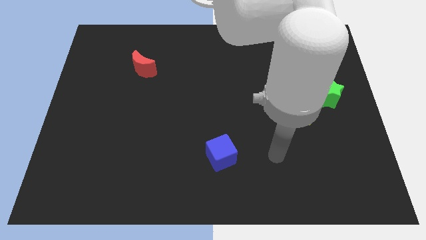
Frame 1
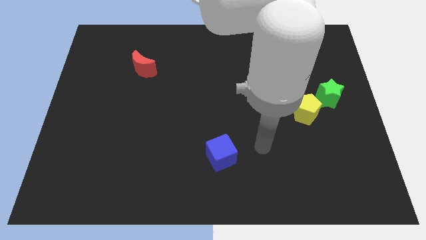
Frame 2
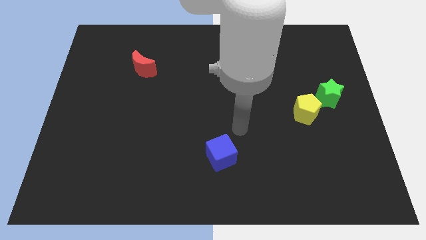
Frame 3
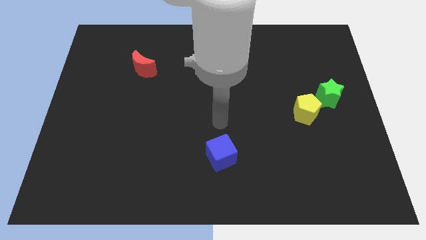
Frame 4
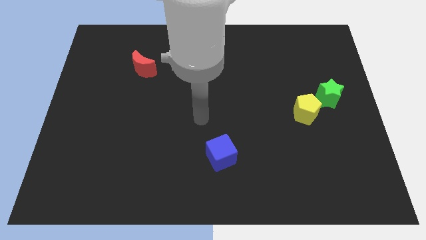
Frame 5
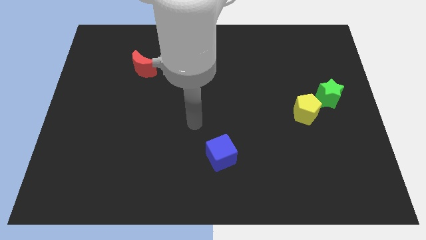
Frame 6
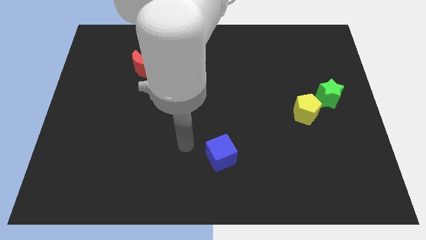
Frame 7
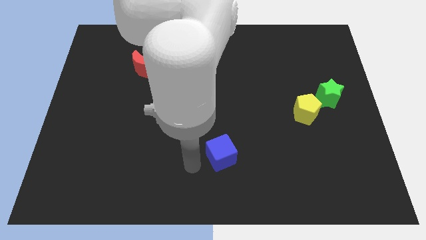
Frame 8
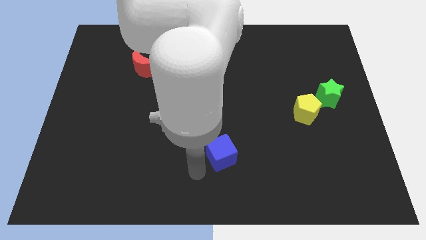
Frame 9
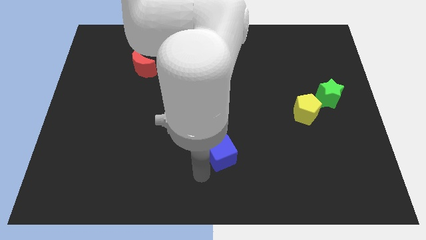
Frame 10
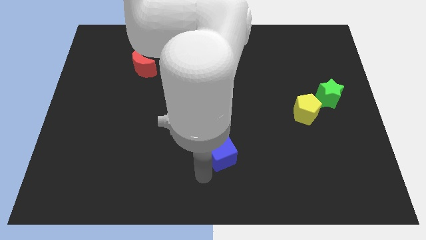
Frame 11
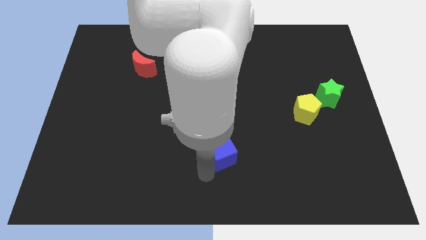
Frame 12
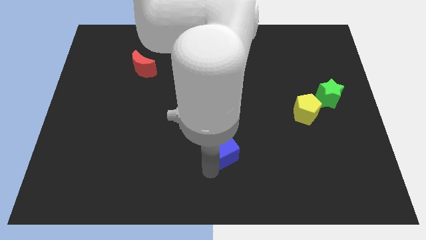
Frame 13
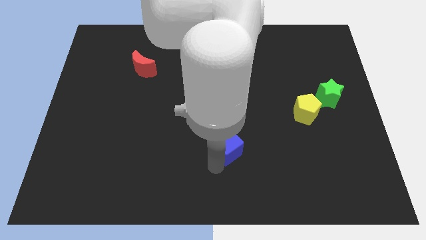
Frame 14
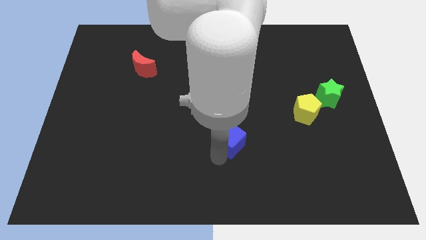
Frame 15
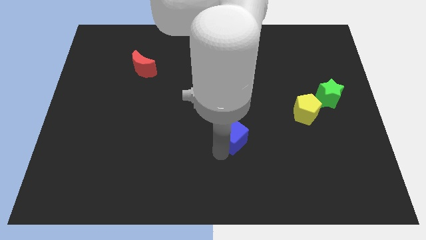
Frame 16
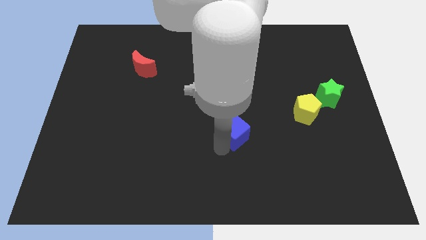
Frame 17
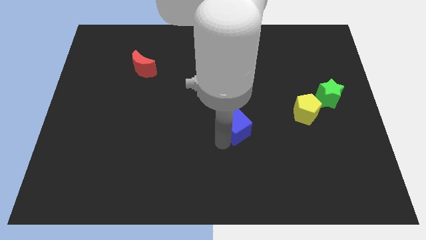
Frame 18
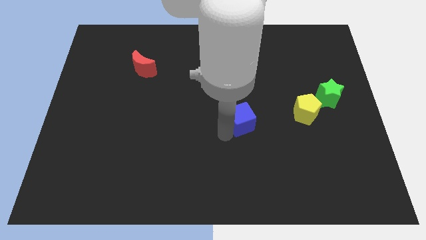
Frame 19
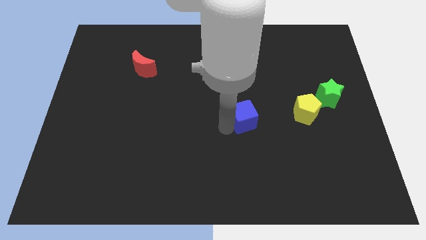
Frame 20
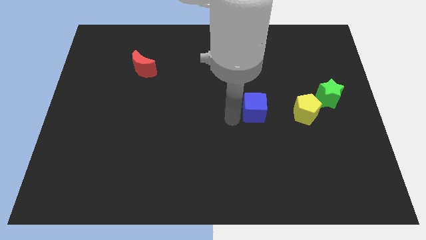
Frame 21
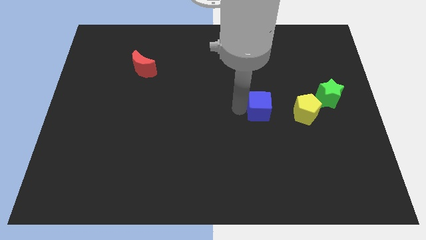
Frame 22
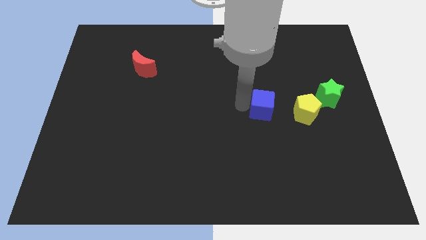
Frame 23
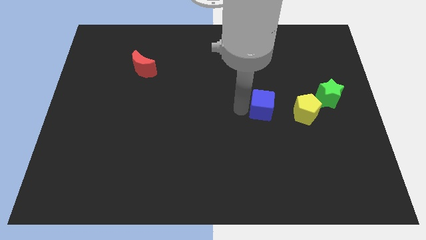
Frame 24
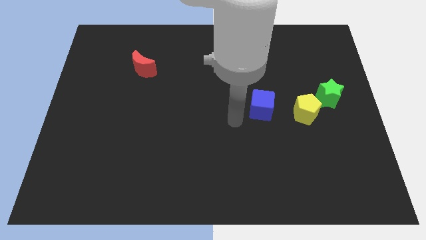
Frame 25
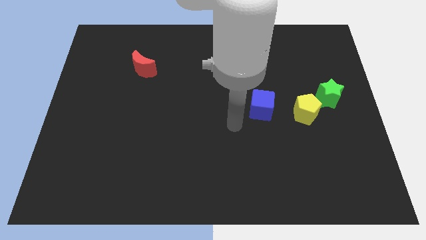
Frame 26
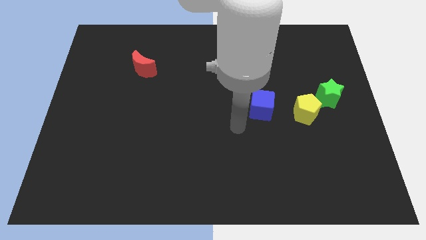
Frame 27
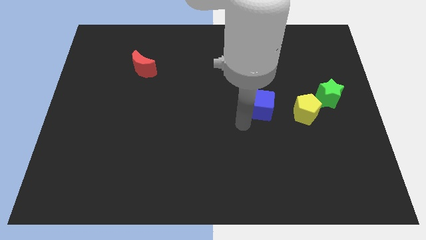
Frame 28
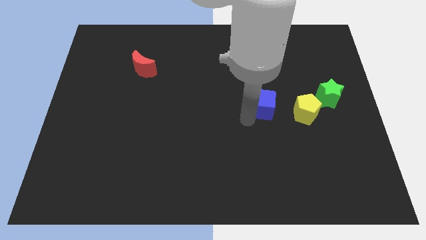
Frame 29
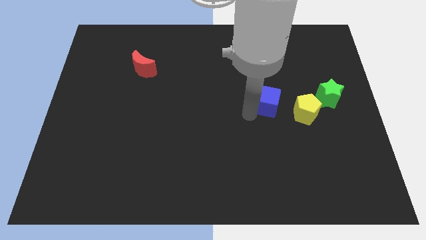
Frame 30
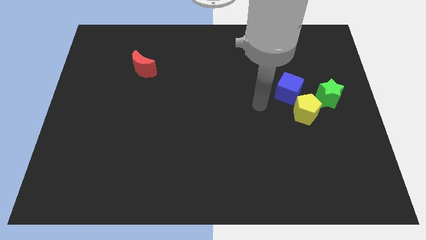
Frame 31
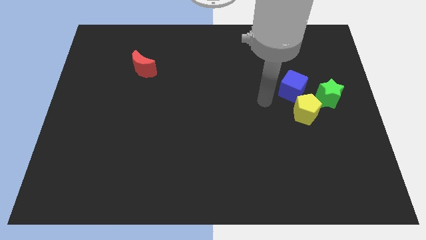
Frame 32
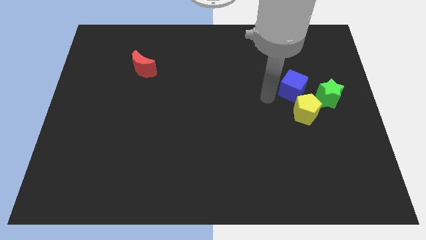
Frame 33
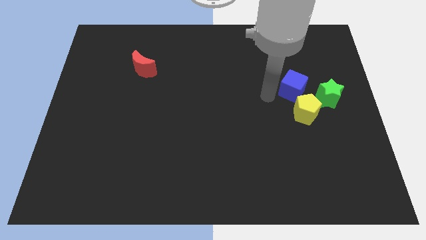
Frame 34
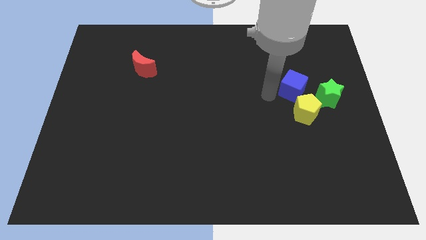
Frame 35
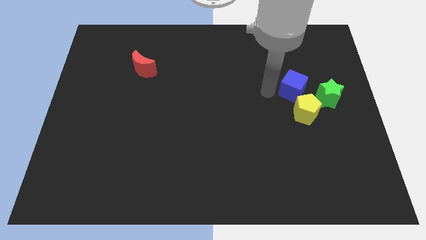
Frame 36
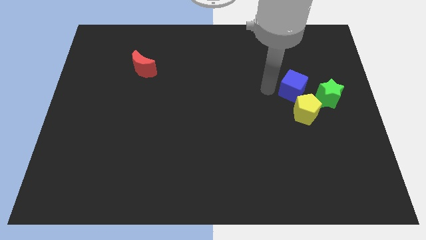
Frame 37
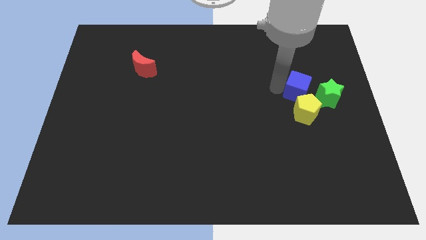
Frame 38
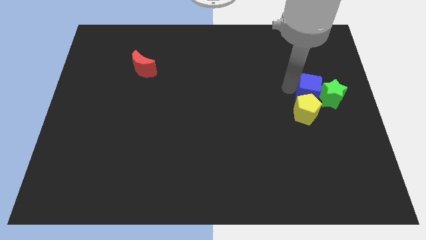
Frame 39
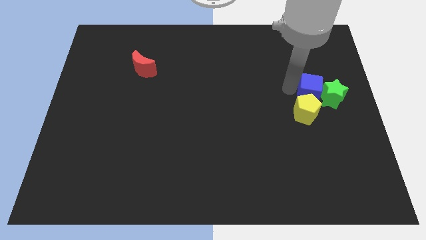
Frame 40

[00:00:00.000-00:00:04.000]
move the blue block next to the star

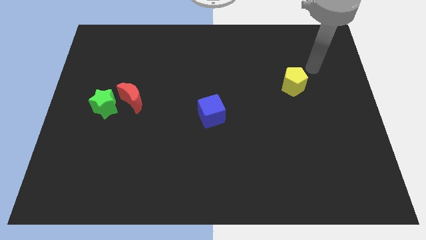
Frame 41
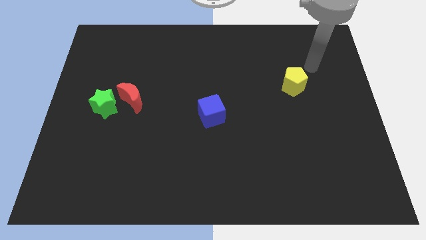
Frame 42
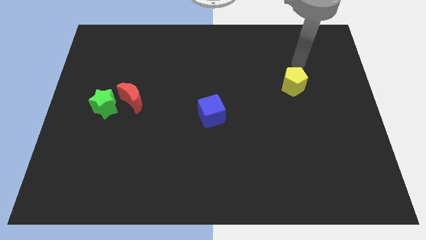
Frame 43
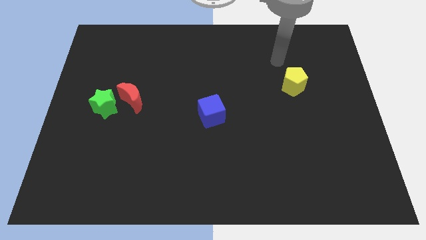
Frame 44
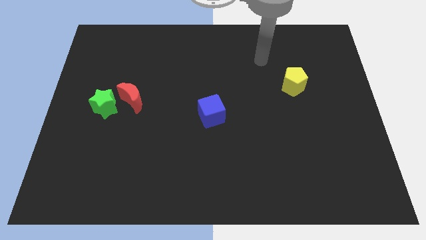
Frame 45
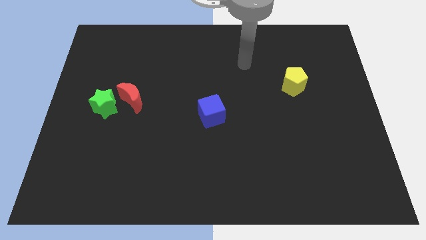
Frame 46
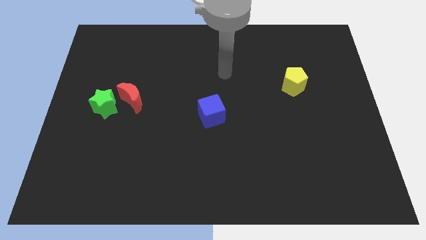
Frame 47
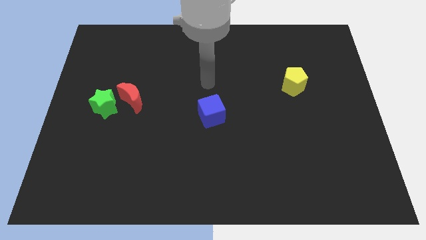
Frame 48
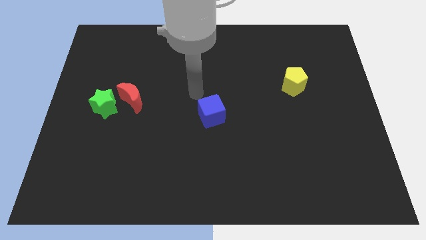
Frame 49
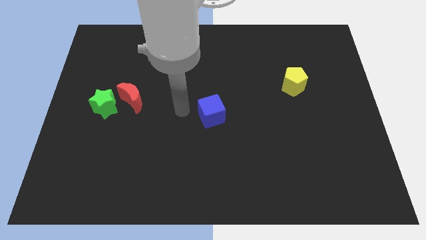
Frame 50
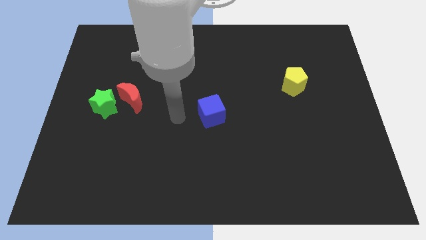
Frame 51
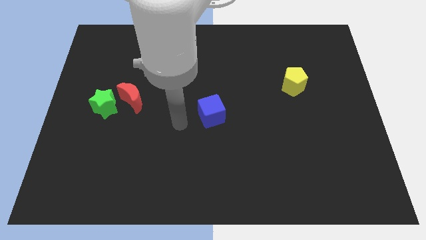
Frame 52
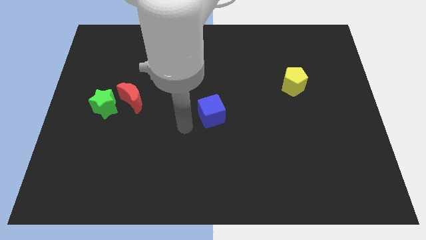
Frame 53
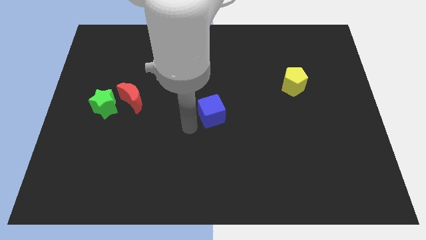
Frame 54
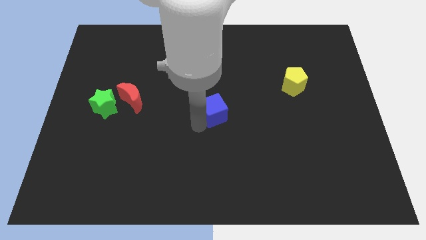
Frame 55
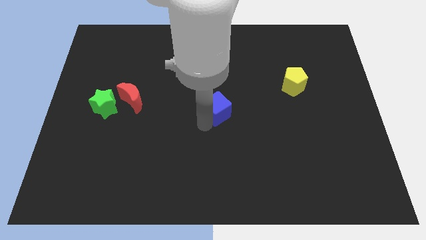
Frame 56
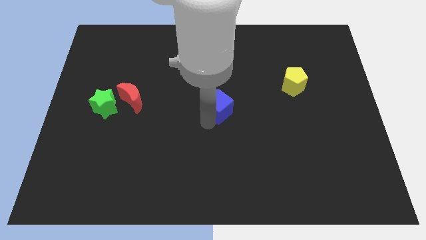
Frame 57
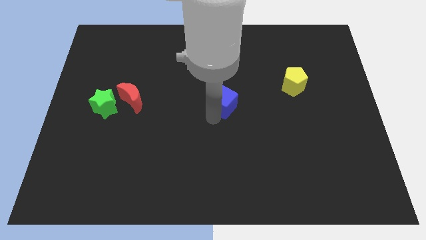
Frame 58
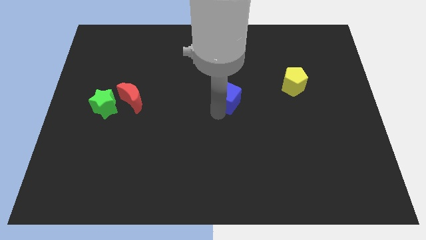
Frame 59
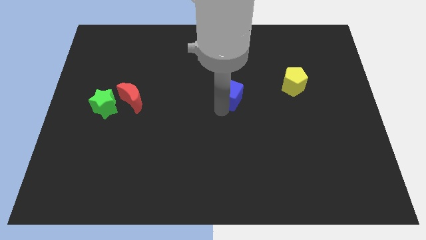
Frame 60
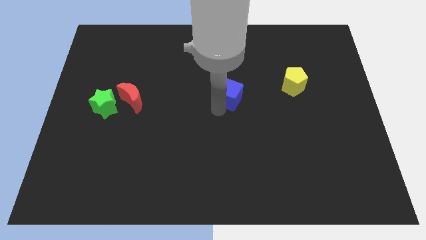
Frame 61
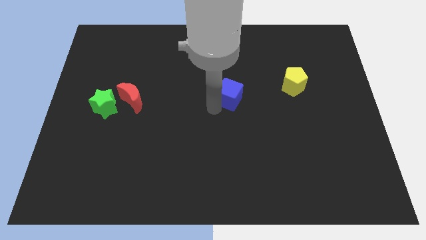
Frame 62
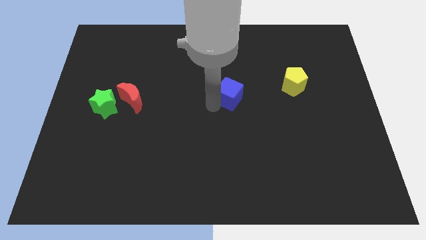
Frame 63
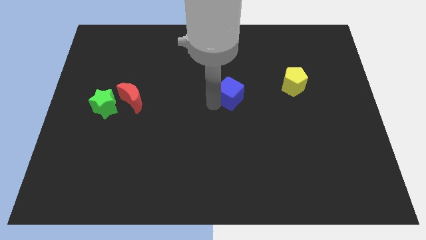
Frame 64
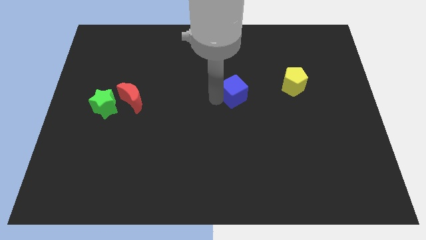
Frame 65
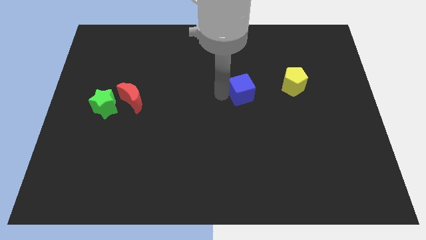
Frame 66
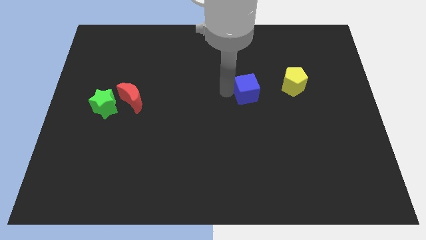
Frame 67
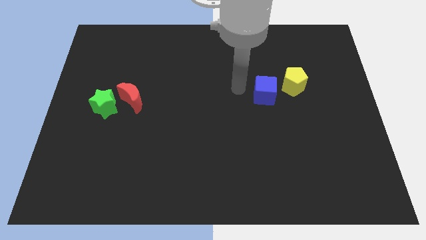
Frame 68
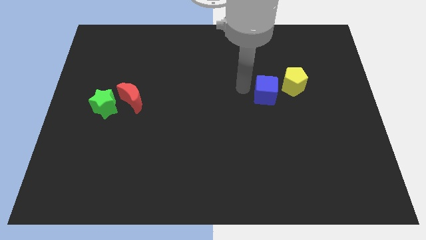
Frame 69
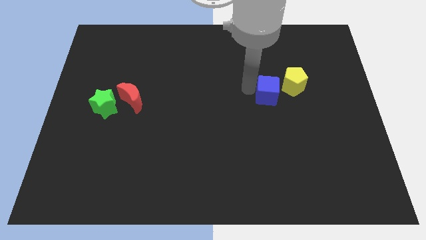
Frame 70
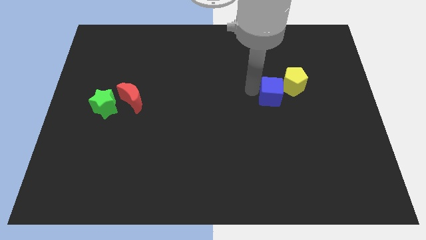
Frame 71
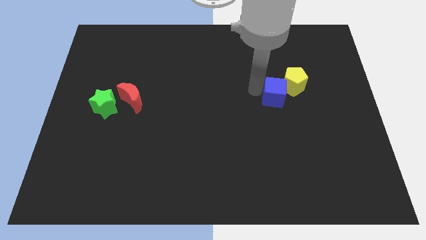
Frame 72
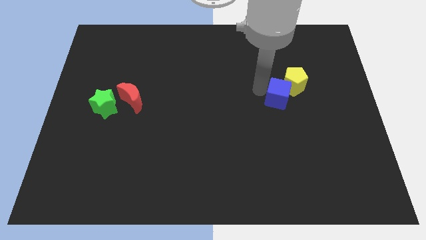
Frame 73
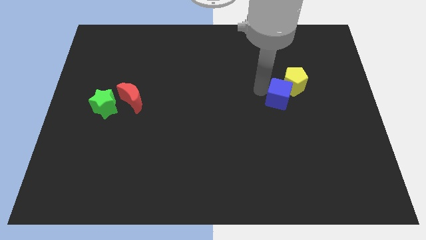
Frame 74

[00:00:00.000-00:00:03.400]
slide the blue block next to the pentagon

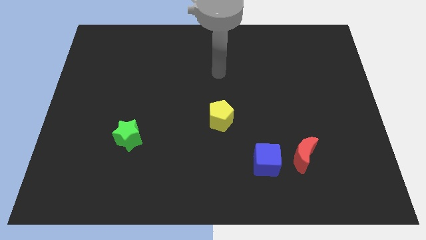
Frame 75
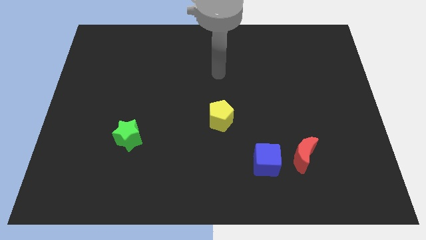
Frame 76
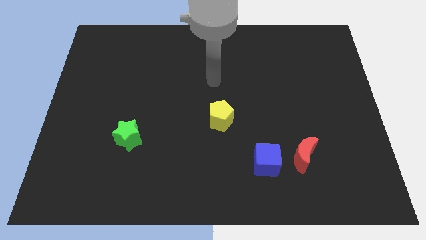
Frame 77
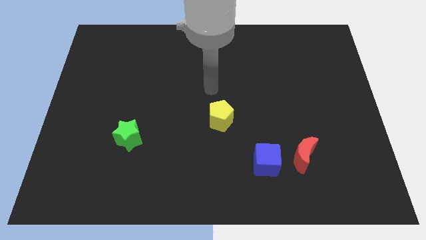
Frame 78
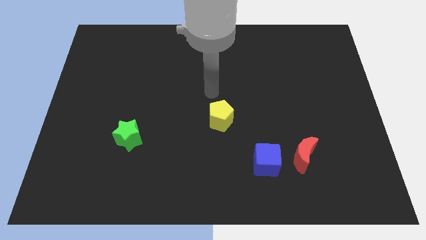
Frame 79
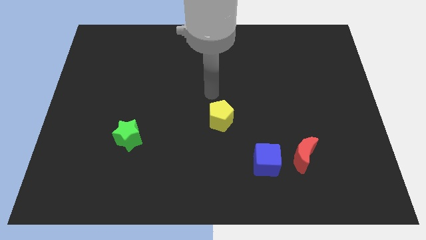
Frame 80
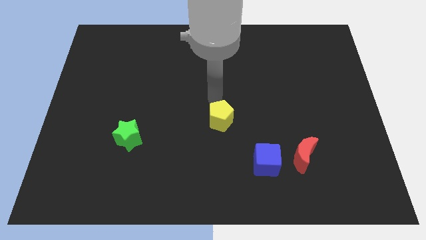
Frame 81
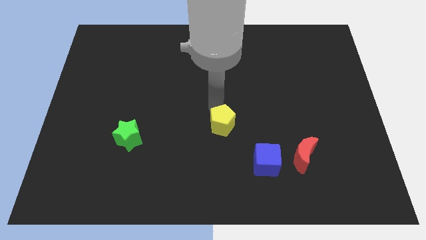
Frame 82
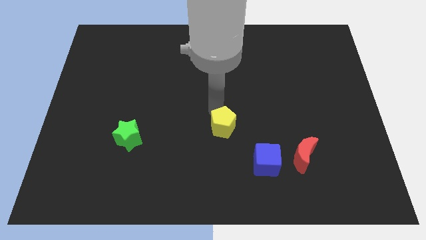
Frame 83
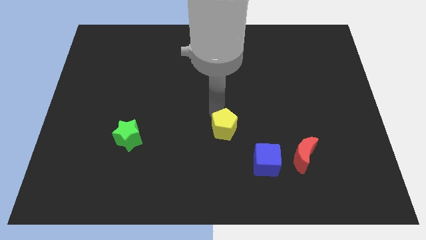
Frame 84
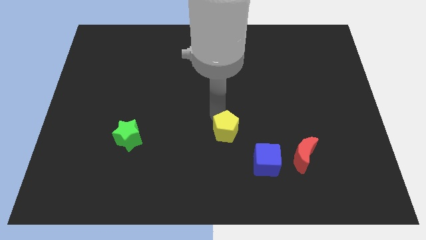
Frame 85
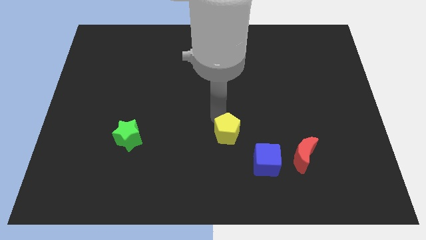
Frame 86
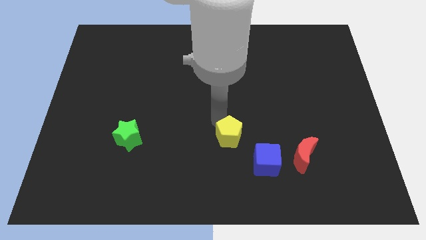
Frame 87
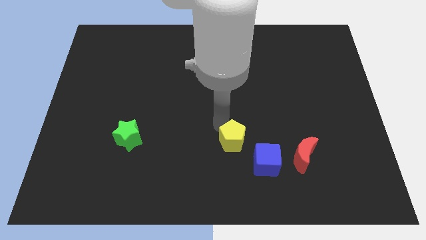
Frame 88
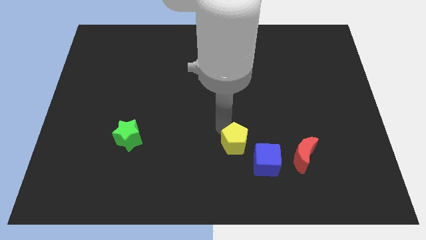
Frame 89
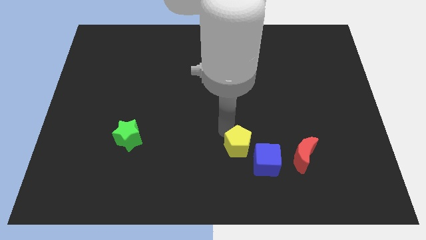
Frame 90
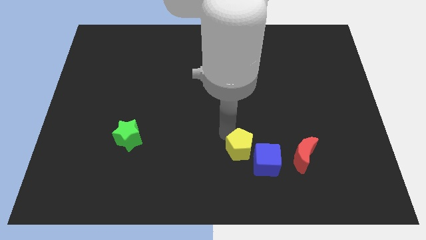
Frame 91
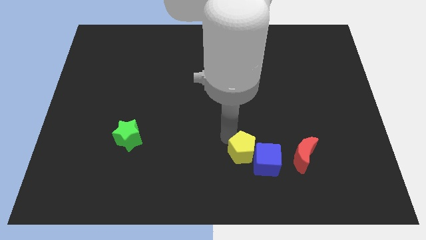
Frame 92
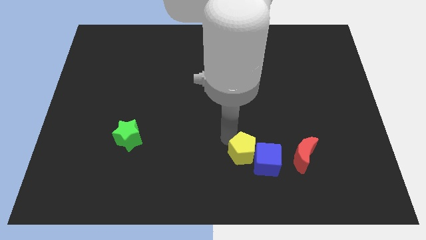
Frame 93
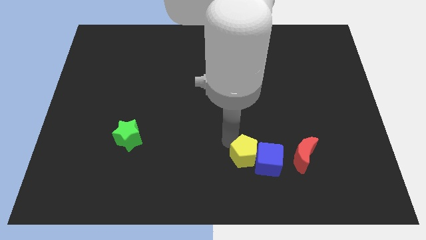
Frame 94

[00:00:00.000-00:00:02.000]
slide the yellow block to the cube
